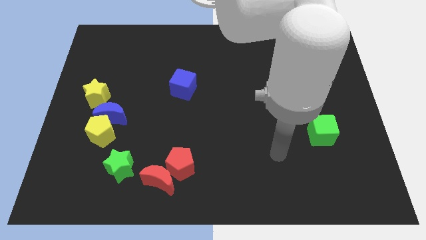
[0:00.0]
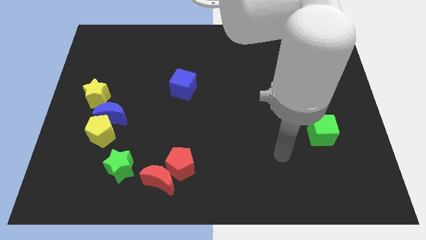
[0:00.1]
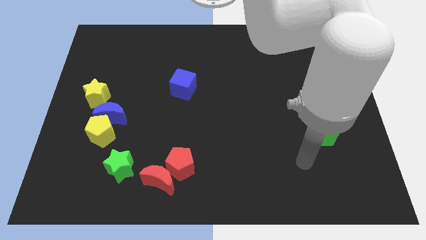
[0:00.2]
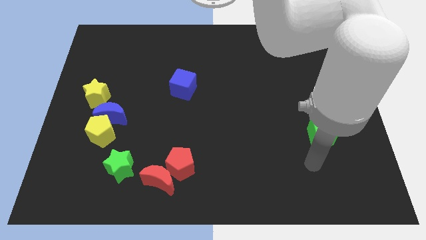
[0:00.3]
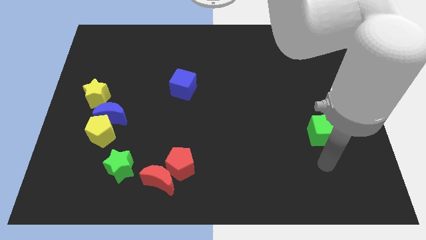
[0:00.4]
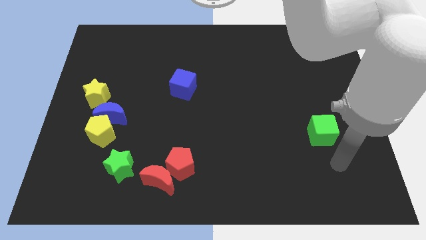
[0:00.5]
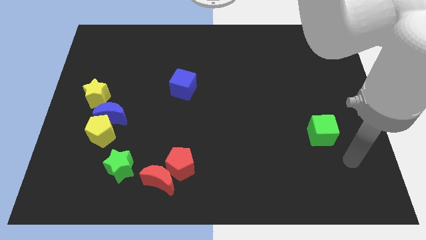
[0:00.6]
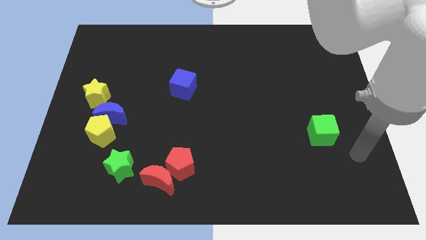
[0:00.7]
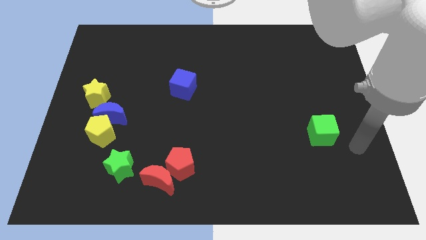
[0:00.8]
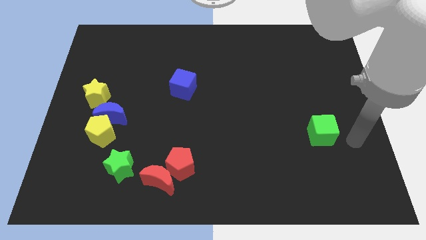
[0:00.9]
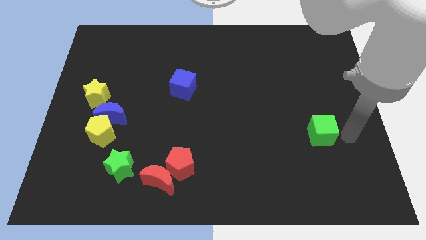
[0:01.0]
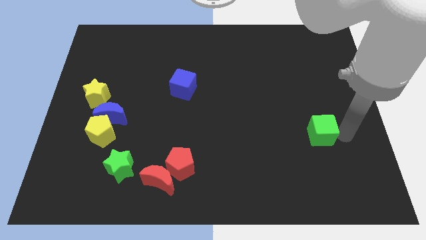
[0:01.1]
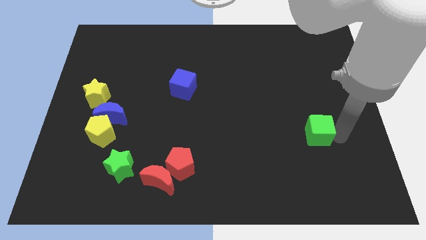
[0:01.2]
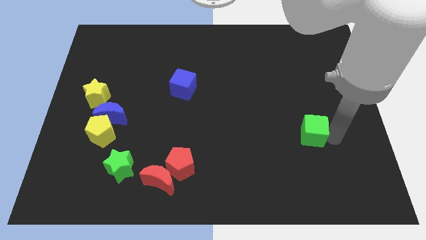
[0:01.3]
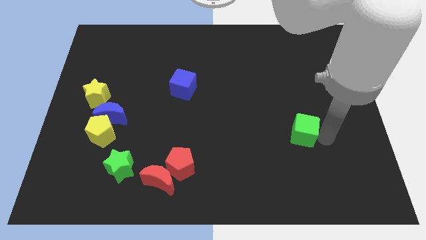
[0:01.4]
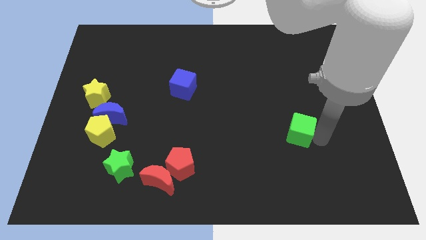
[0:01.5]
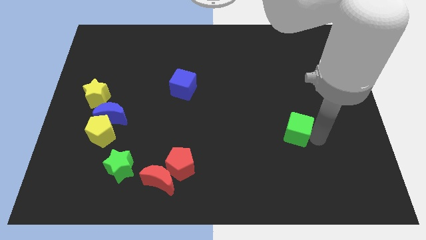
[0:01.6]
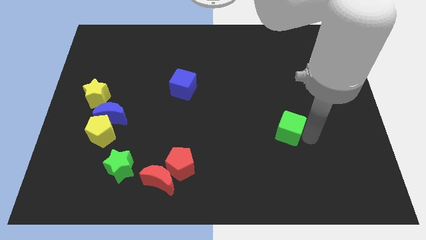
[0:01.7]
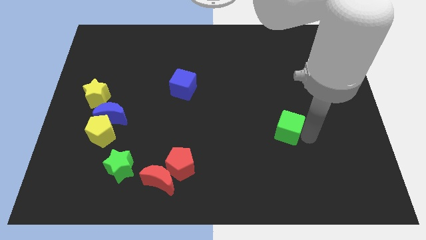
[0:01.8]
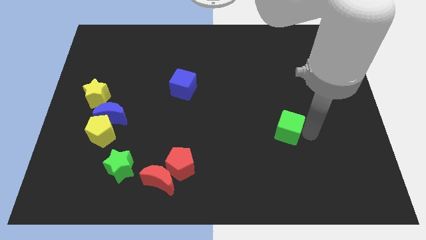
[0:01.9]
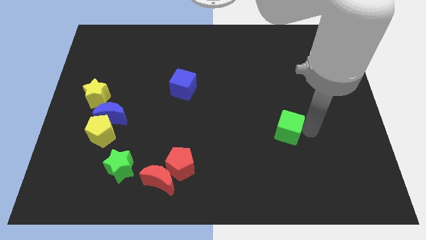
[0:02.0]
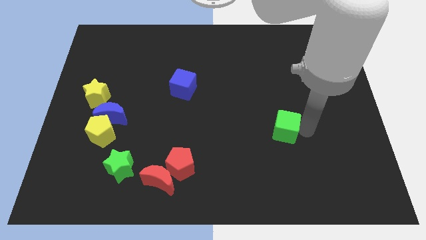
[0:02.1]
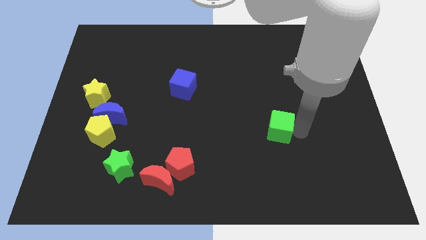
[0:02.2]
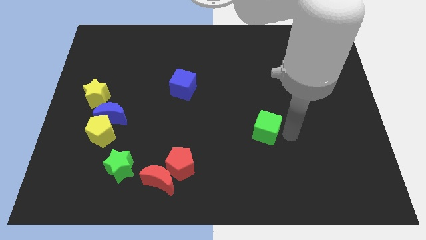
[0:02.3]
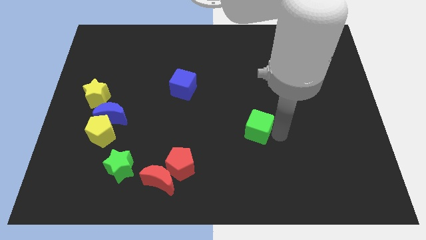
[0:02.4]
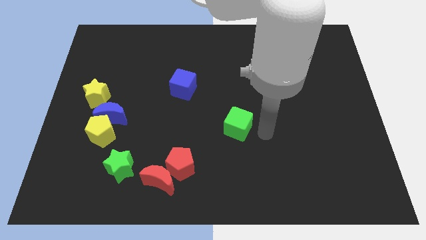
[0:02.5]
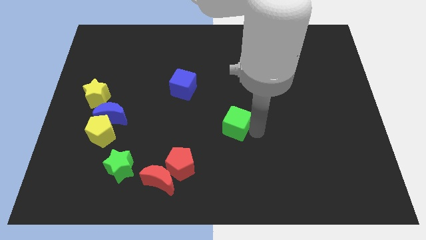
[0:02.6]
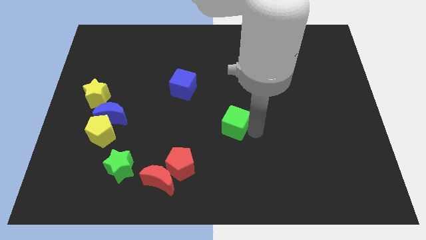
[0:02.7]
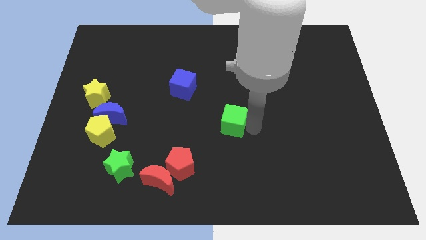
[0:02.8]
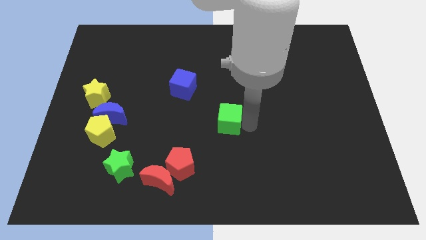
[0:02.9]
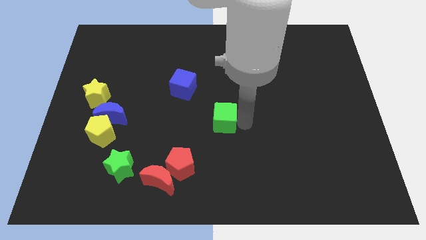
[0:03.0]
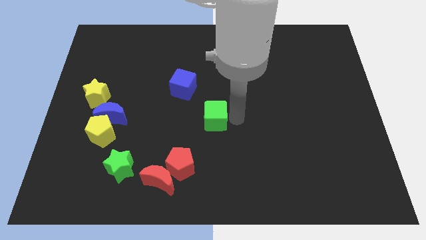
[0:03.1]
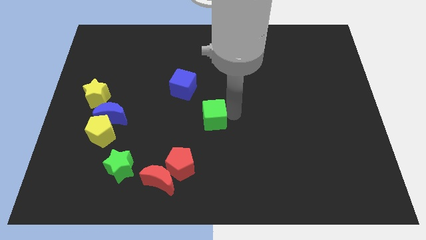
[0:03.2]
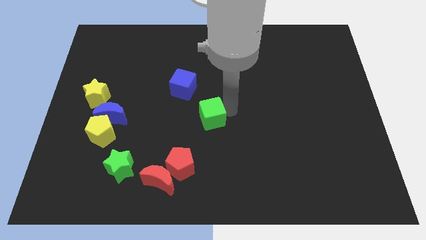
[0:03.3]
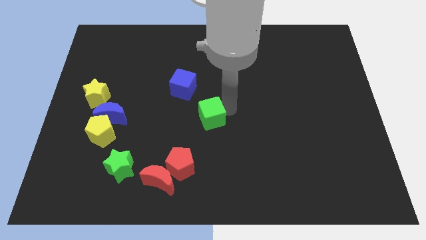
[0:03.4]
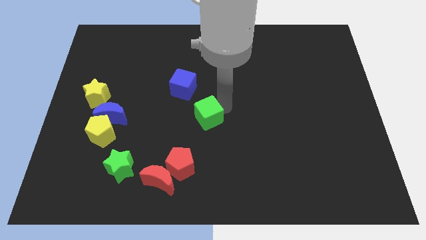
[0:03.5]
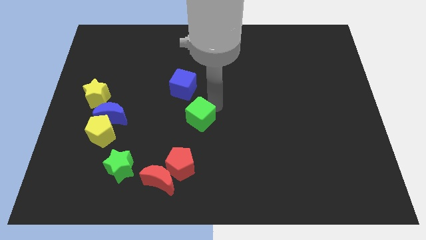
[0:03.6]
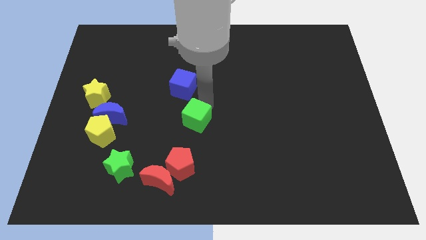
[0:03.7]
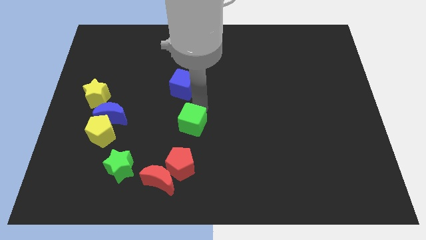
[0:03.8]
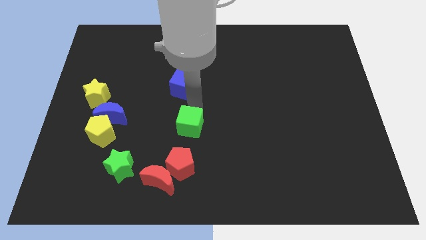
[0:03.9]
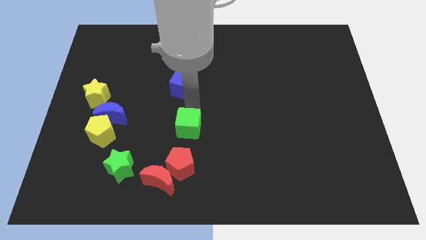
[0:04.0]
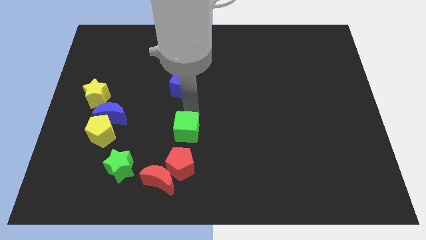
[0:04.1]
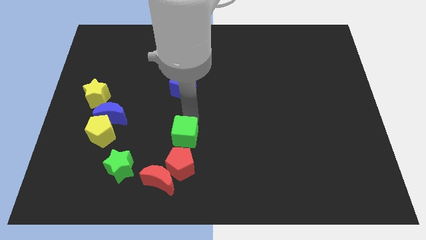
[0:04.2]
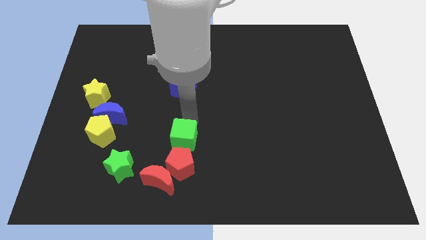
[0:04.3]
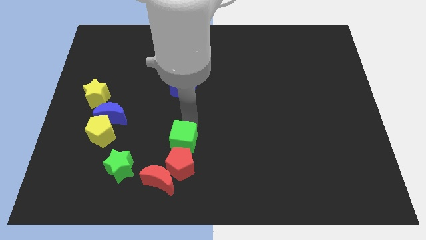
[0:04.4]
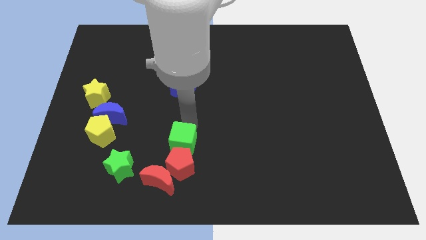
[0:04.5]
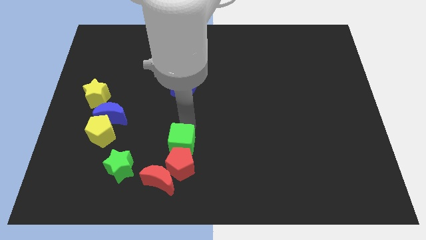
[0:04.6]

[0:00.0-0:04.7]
slide the green cube to the red pentagon

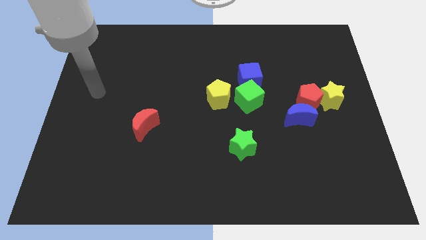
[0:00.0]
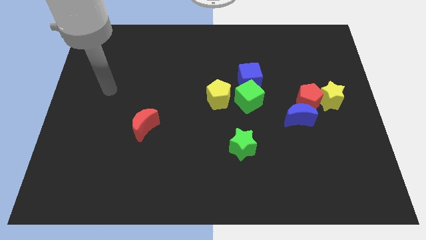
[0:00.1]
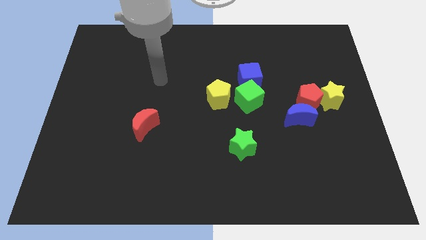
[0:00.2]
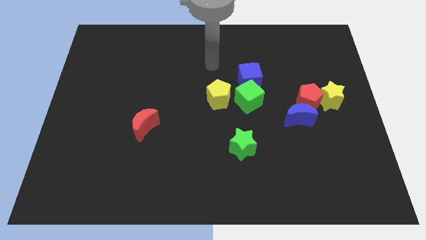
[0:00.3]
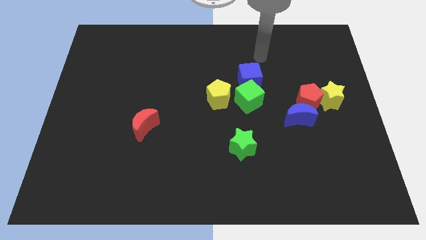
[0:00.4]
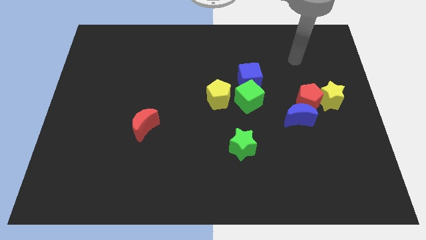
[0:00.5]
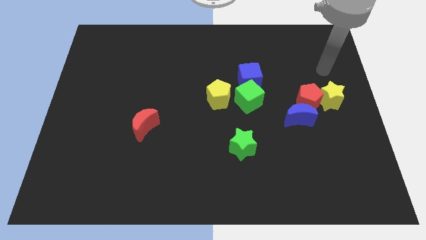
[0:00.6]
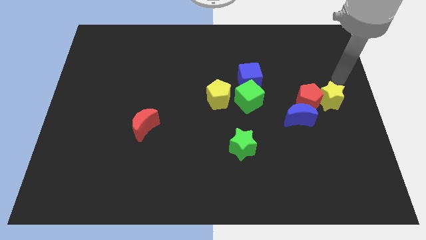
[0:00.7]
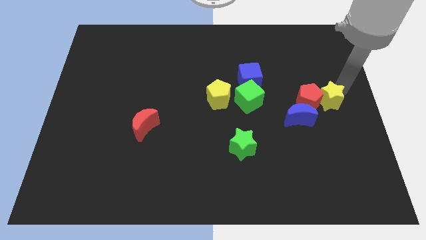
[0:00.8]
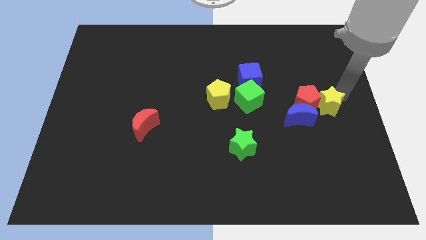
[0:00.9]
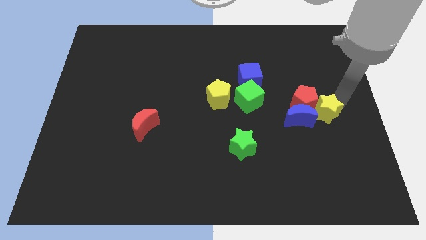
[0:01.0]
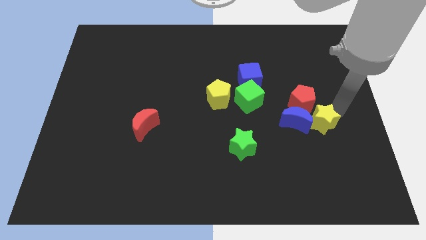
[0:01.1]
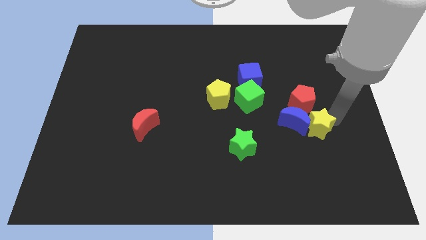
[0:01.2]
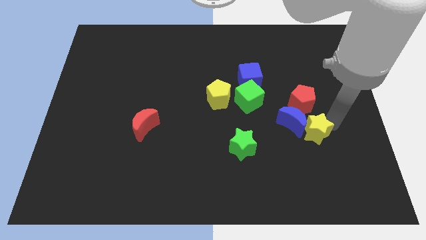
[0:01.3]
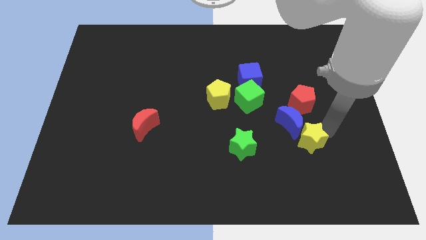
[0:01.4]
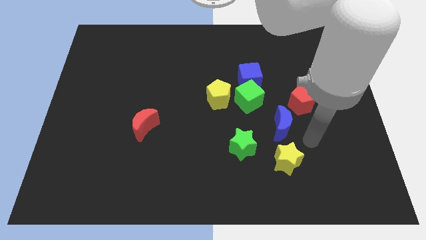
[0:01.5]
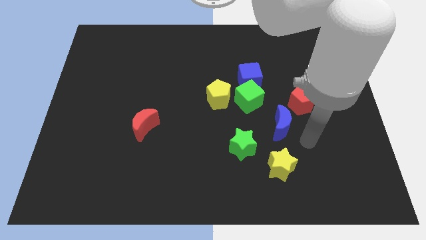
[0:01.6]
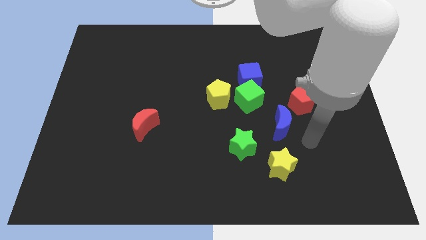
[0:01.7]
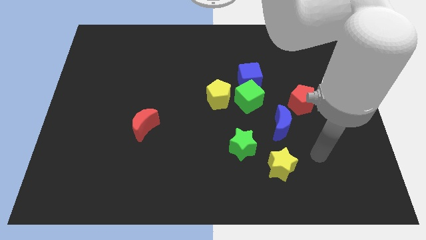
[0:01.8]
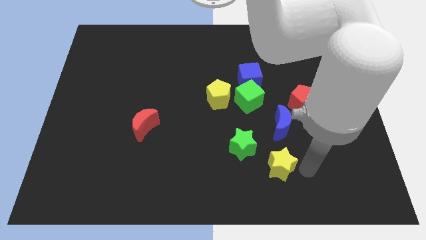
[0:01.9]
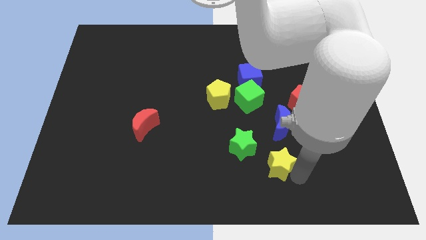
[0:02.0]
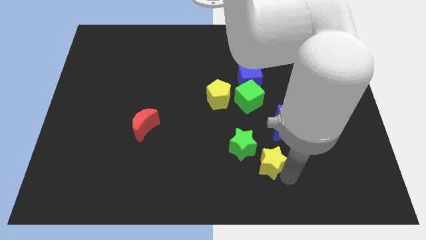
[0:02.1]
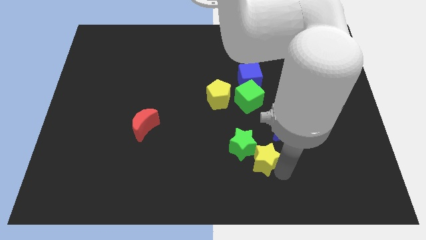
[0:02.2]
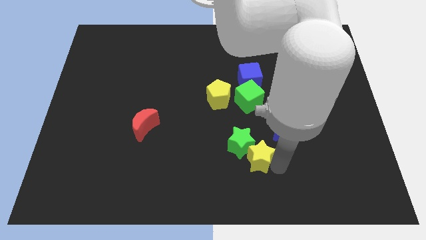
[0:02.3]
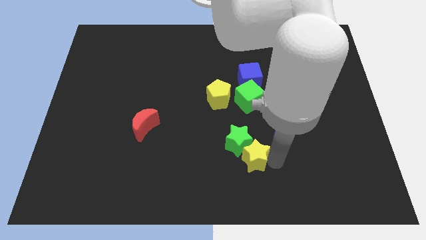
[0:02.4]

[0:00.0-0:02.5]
push the yellow star next to the green star

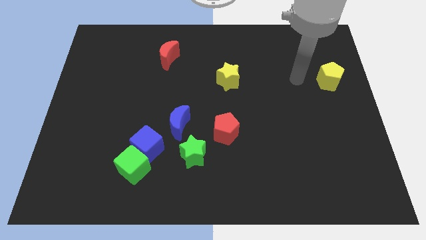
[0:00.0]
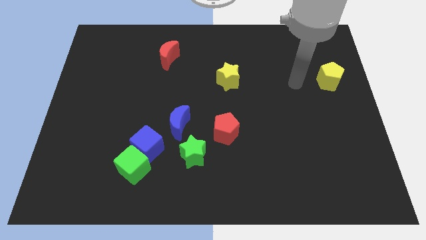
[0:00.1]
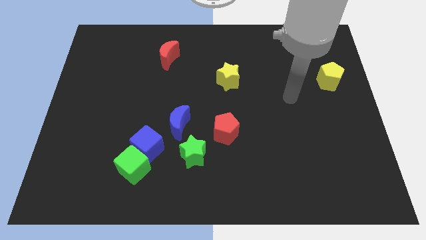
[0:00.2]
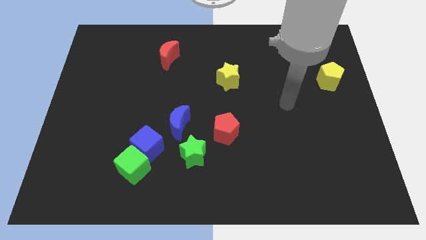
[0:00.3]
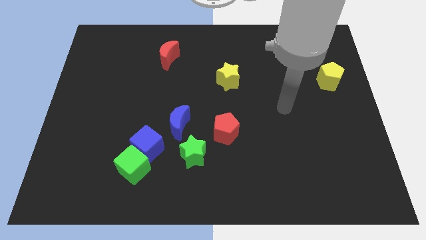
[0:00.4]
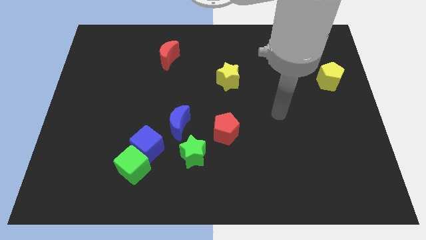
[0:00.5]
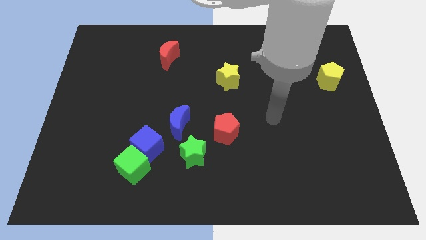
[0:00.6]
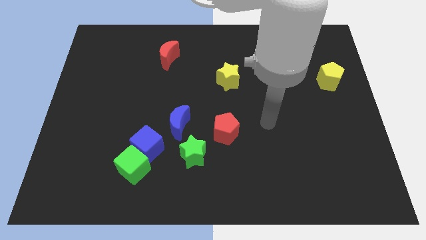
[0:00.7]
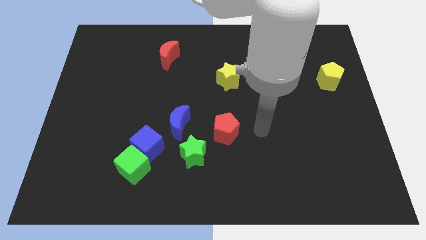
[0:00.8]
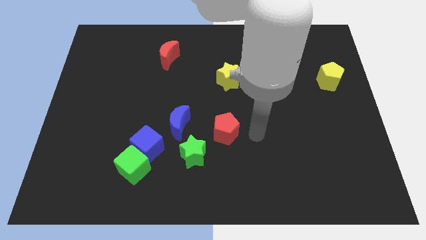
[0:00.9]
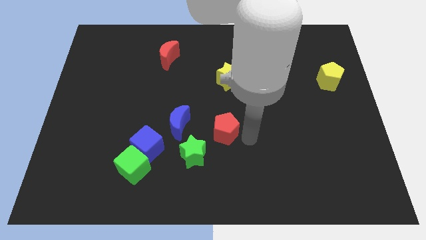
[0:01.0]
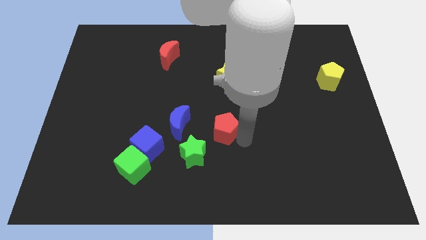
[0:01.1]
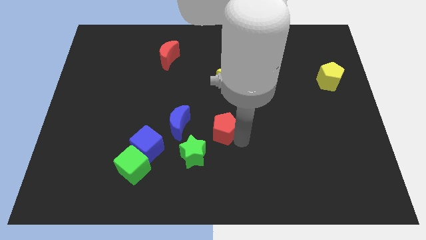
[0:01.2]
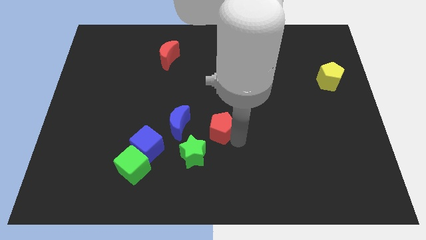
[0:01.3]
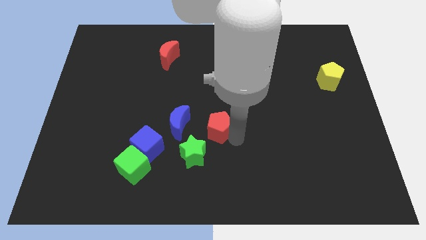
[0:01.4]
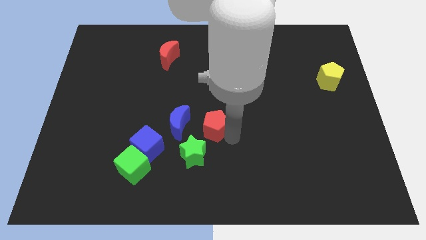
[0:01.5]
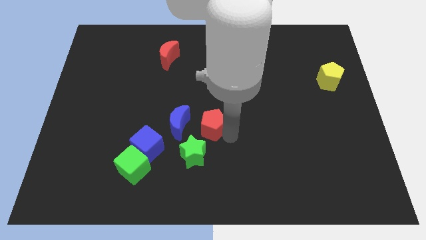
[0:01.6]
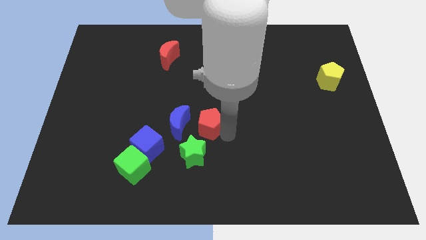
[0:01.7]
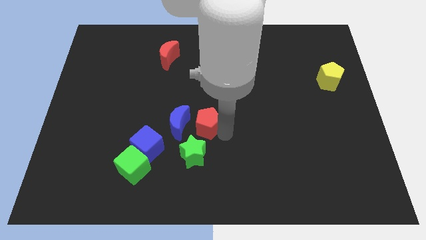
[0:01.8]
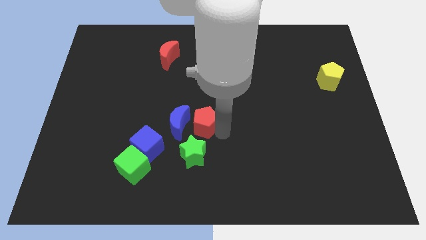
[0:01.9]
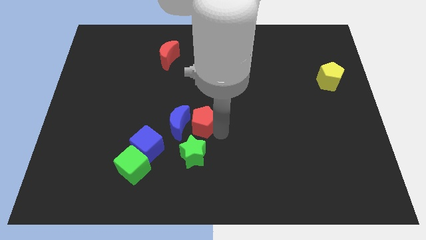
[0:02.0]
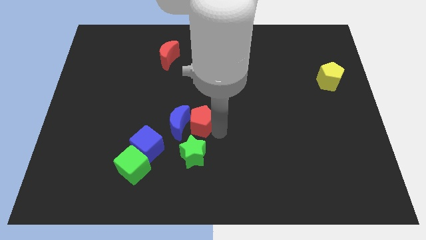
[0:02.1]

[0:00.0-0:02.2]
move the red pentagon towards the blue moon
